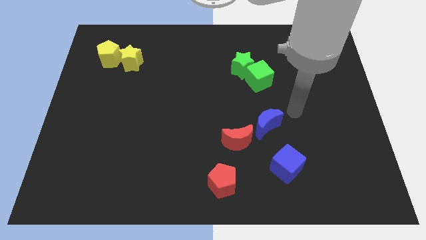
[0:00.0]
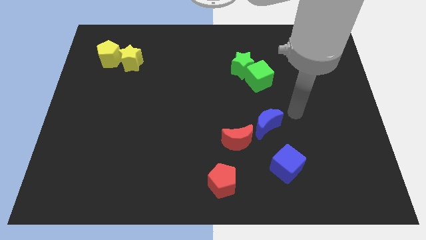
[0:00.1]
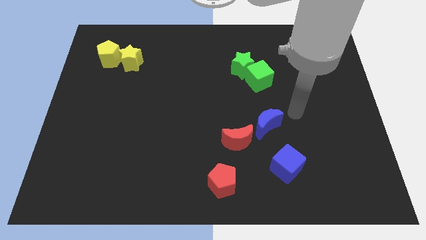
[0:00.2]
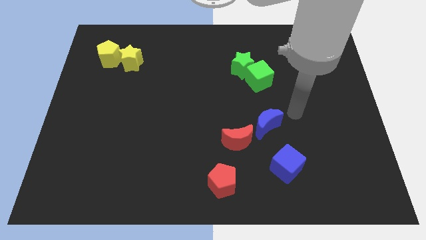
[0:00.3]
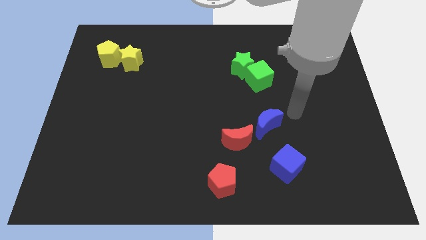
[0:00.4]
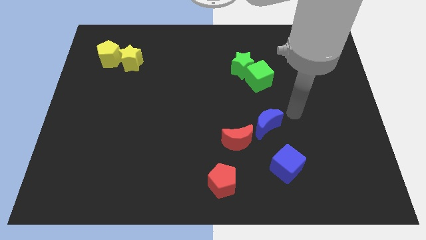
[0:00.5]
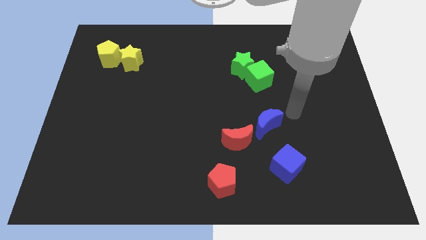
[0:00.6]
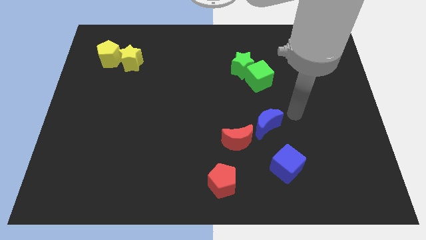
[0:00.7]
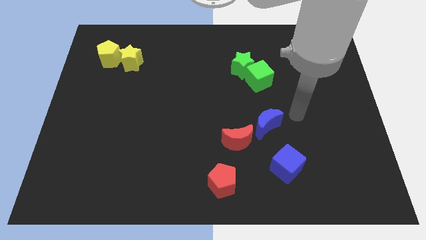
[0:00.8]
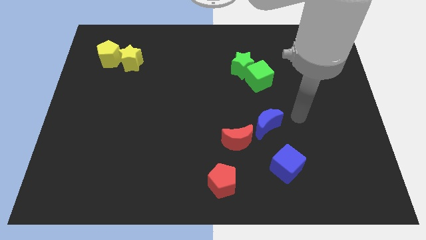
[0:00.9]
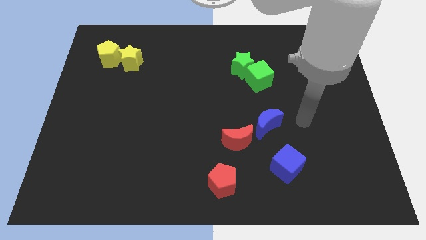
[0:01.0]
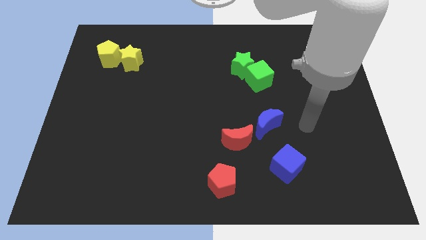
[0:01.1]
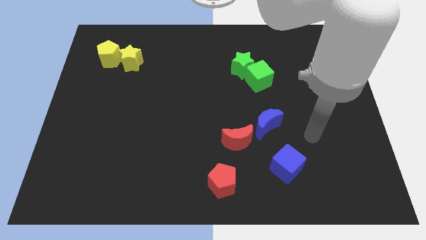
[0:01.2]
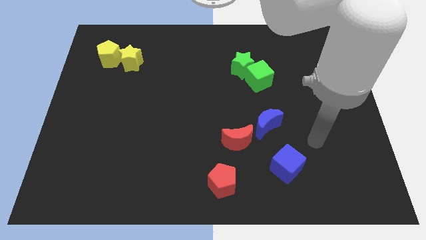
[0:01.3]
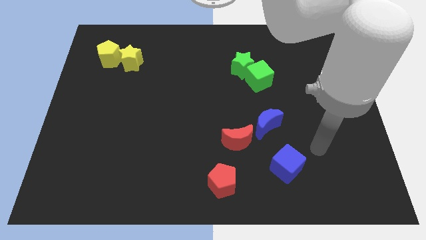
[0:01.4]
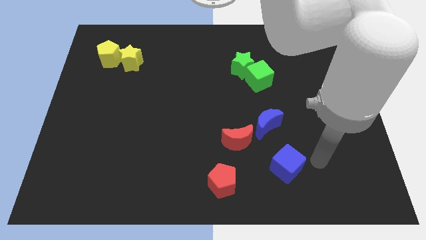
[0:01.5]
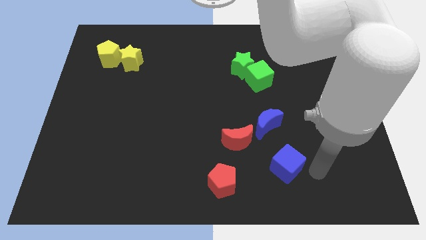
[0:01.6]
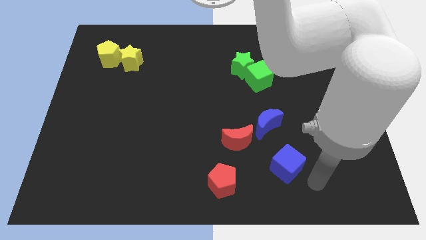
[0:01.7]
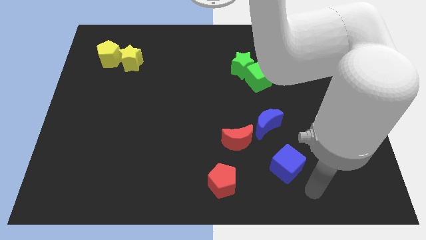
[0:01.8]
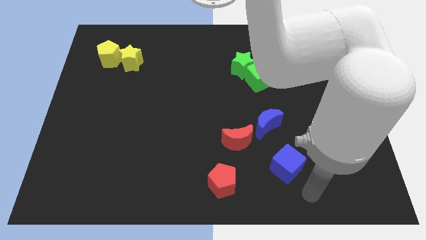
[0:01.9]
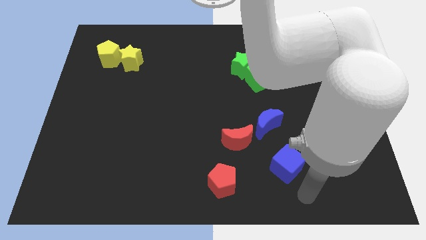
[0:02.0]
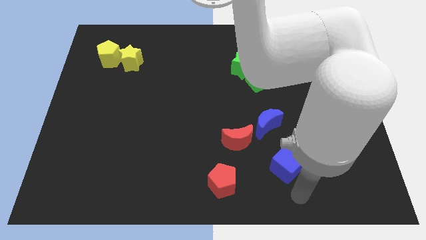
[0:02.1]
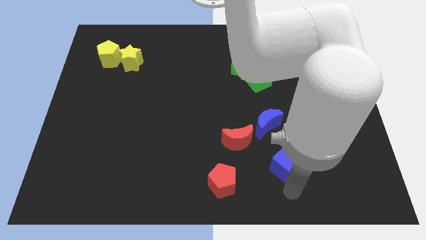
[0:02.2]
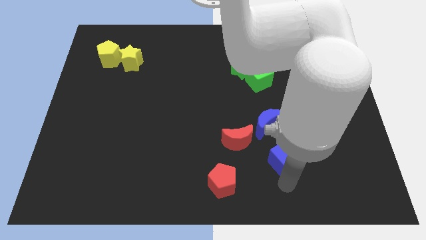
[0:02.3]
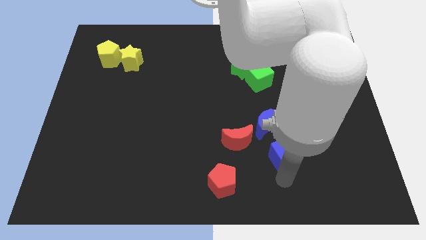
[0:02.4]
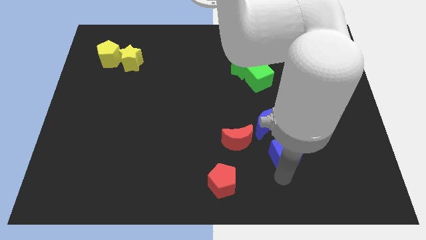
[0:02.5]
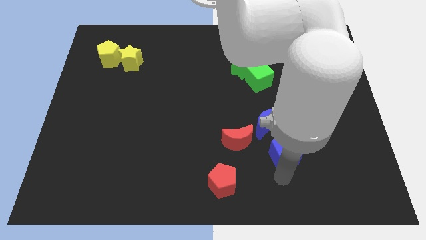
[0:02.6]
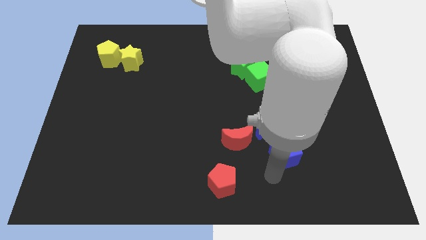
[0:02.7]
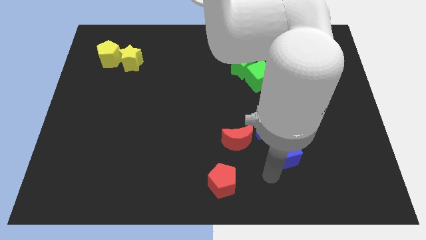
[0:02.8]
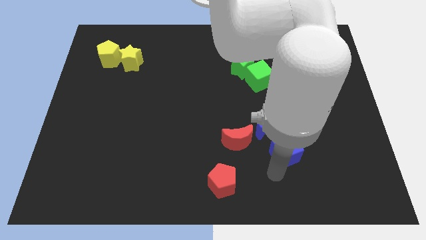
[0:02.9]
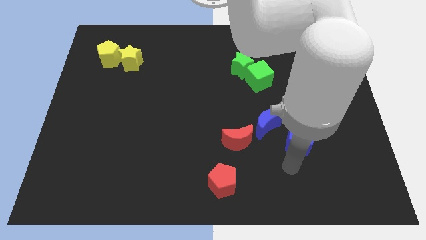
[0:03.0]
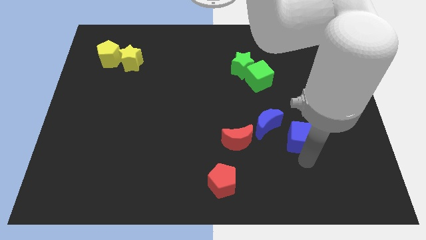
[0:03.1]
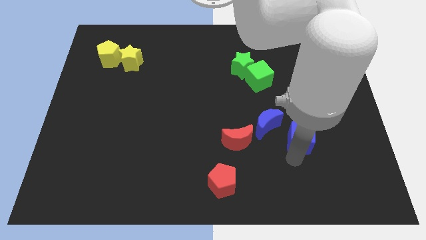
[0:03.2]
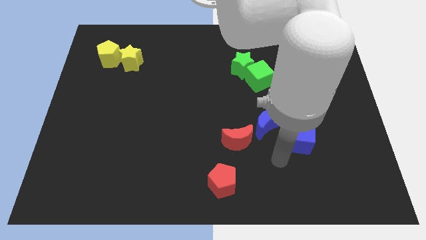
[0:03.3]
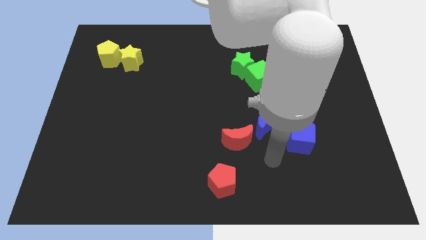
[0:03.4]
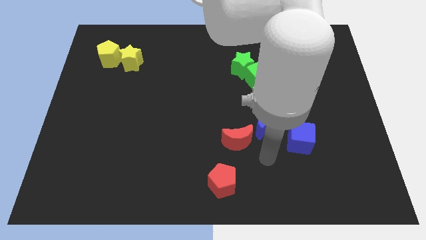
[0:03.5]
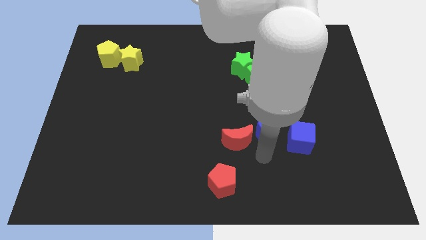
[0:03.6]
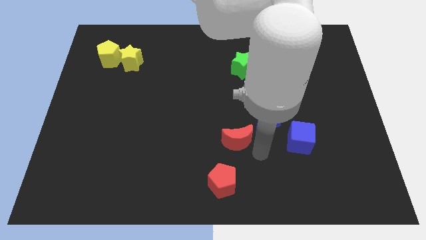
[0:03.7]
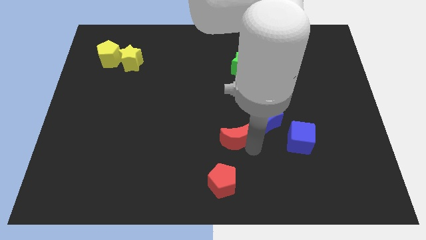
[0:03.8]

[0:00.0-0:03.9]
push the blue cube to the right of the blue crescent

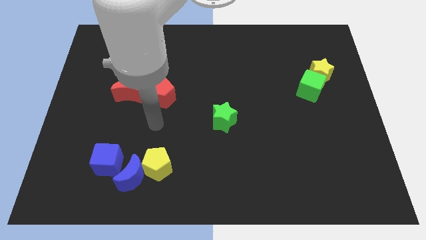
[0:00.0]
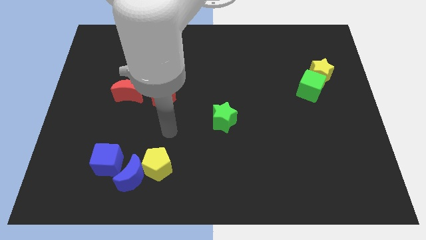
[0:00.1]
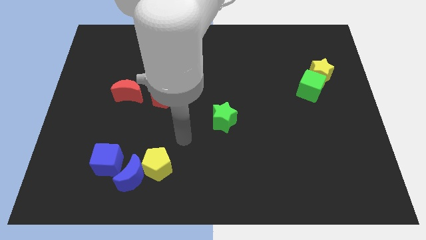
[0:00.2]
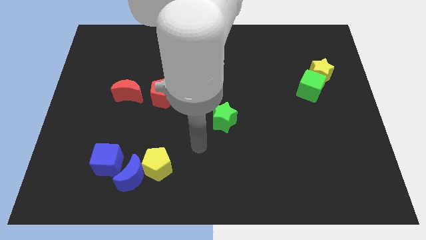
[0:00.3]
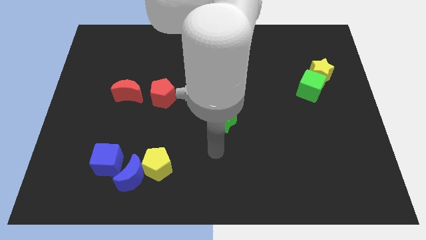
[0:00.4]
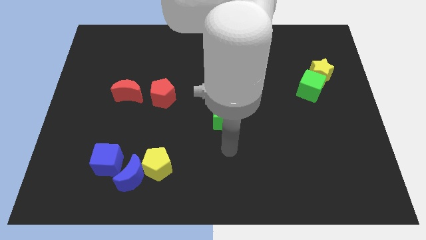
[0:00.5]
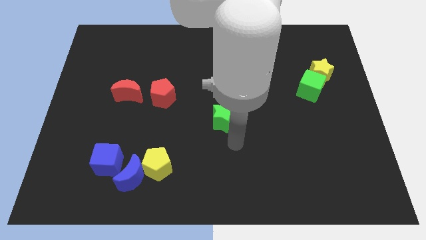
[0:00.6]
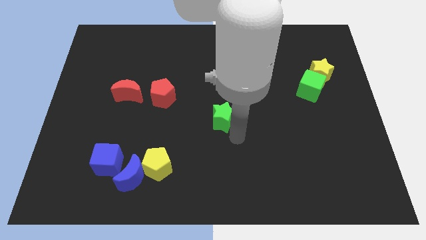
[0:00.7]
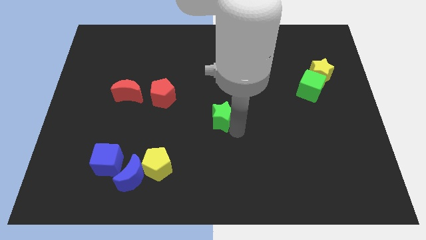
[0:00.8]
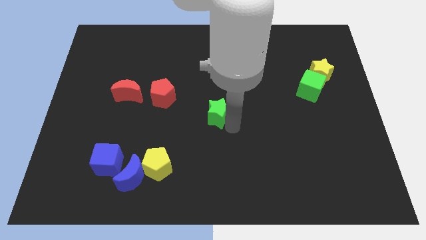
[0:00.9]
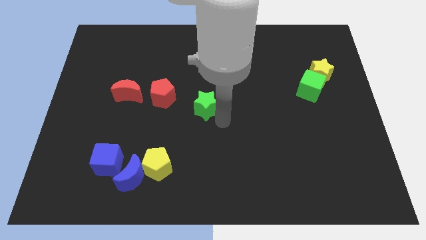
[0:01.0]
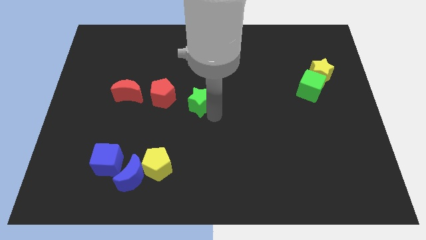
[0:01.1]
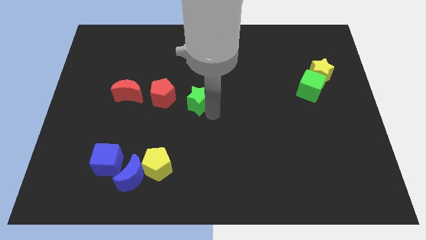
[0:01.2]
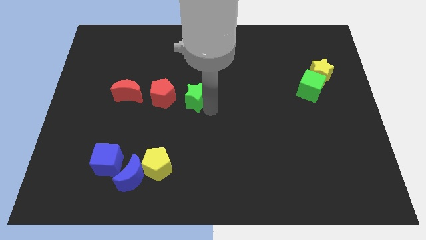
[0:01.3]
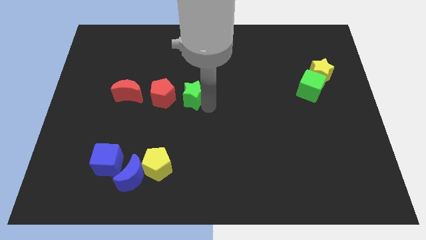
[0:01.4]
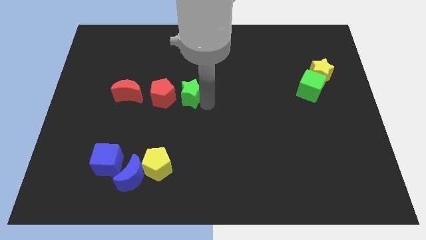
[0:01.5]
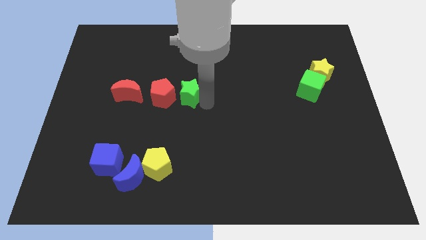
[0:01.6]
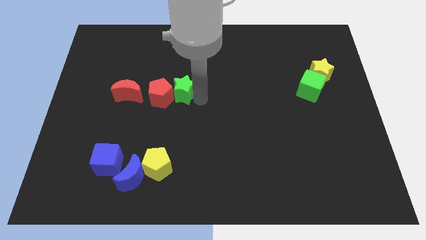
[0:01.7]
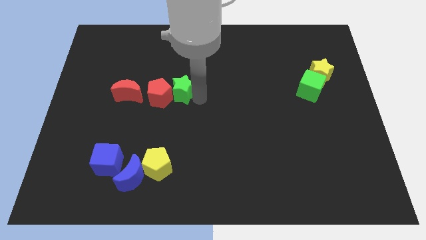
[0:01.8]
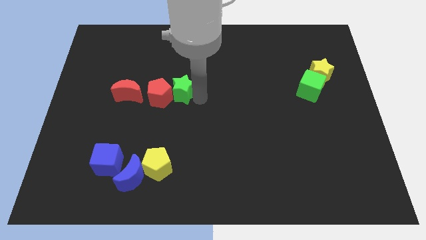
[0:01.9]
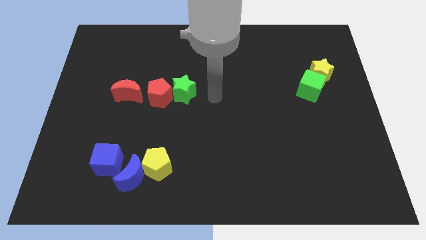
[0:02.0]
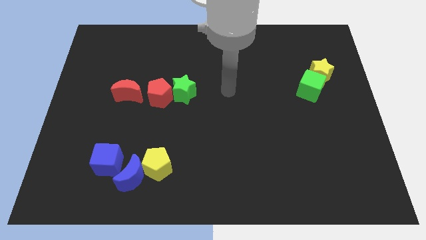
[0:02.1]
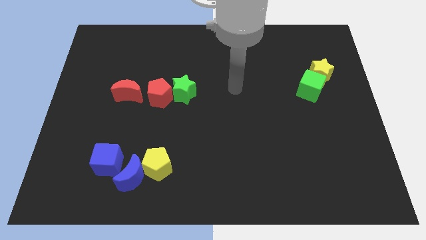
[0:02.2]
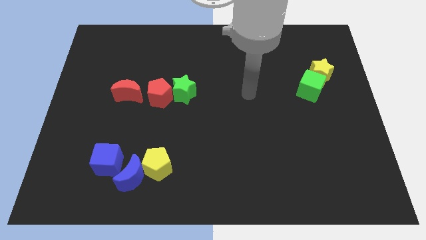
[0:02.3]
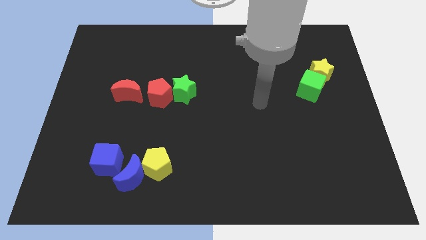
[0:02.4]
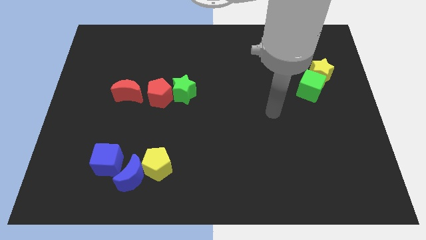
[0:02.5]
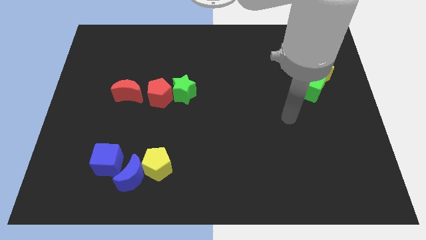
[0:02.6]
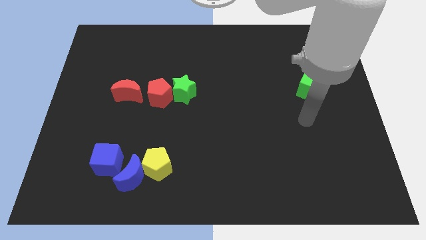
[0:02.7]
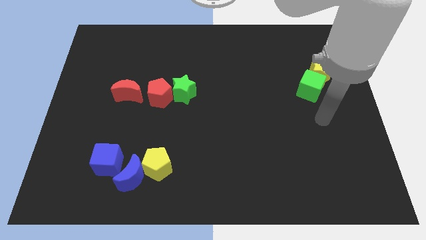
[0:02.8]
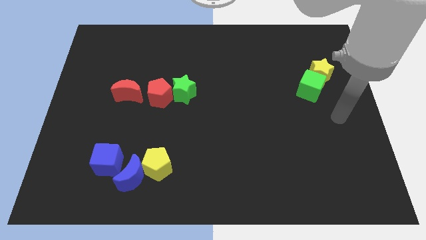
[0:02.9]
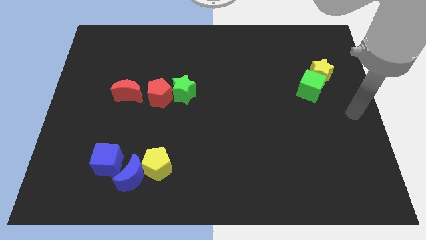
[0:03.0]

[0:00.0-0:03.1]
move green star into red pentagon

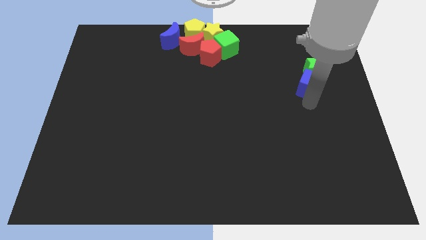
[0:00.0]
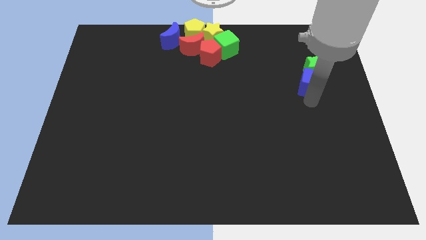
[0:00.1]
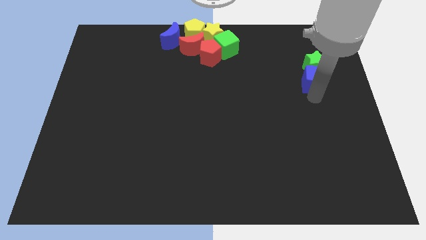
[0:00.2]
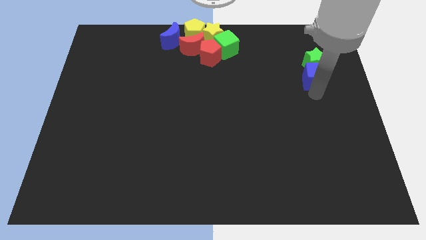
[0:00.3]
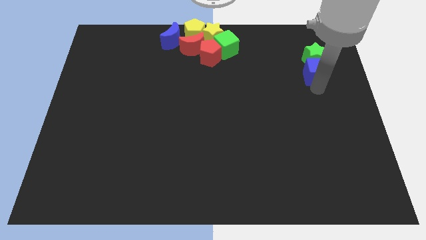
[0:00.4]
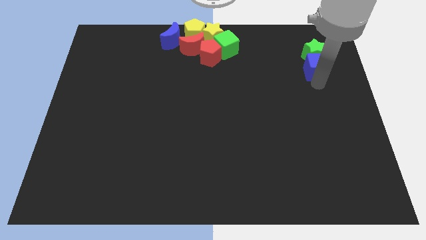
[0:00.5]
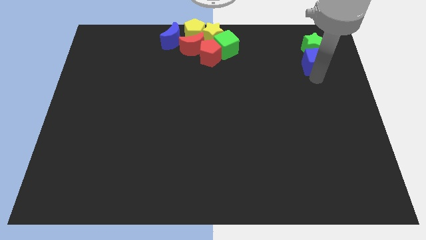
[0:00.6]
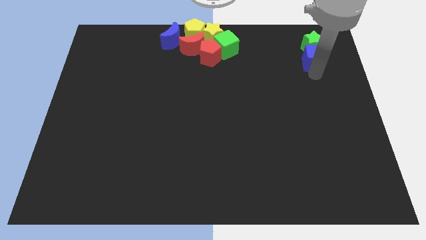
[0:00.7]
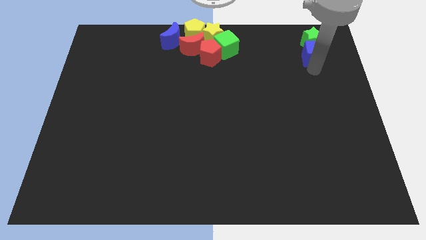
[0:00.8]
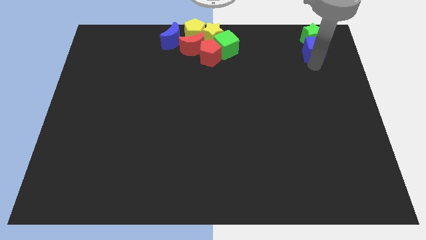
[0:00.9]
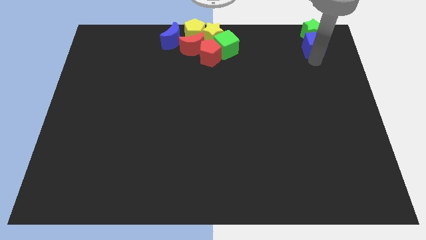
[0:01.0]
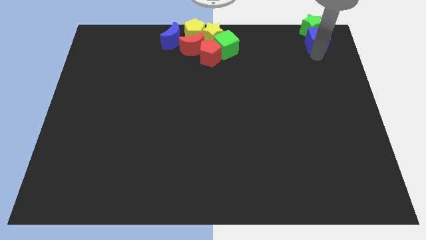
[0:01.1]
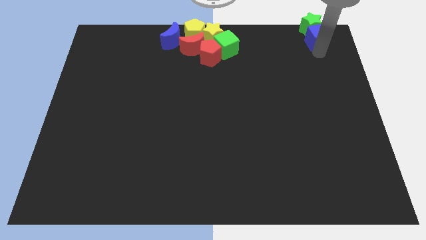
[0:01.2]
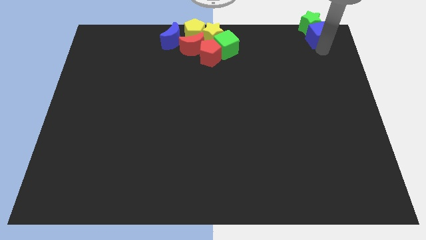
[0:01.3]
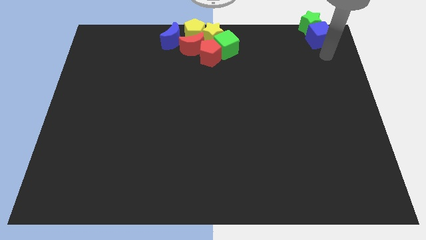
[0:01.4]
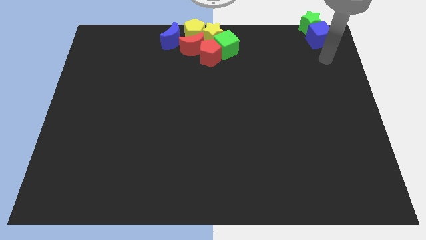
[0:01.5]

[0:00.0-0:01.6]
push blue cube along with green star towards top right of the board

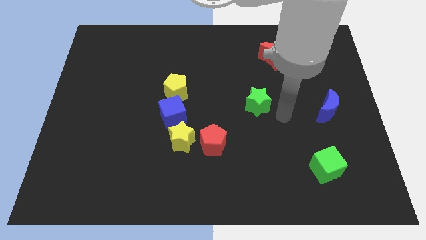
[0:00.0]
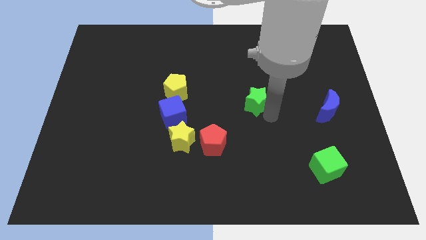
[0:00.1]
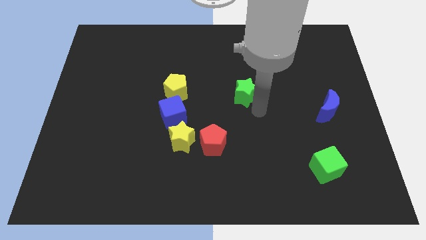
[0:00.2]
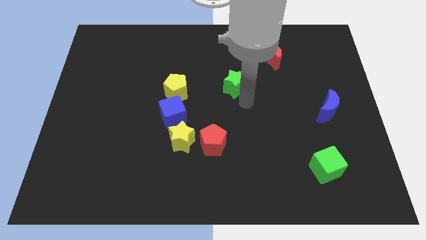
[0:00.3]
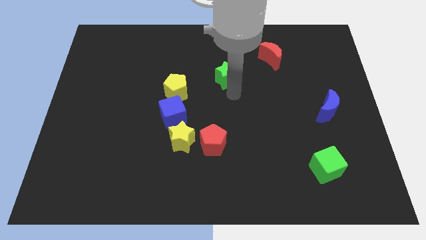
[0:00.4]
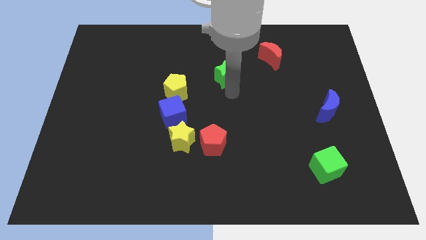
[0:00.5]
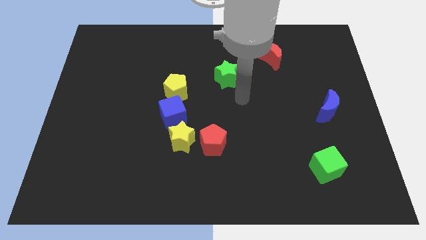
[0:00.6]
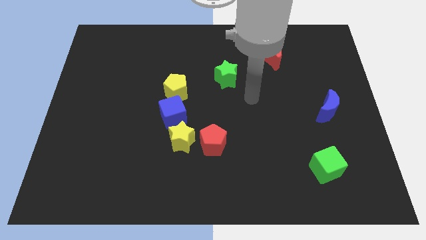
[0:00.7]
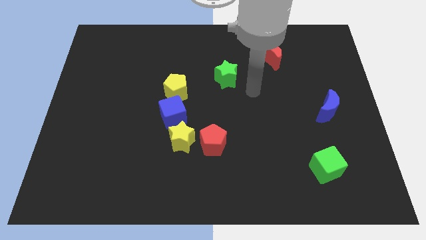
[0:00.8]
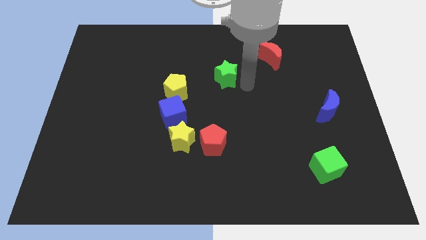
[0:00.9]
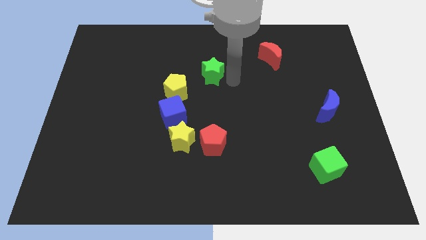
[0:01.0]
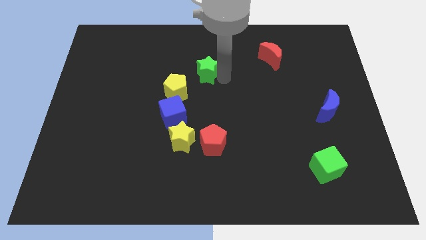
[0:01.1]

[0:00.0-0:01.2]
push the green star upwards
